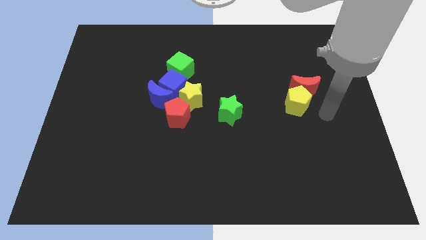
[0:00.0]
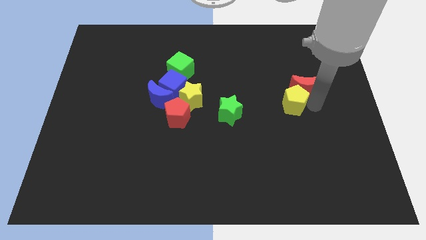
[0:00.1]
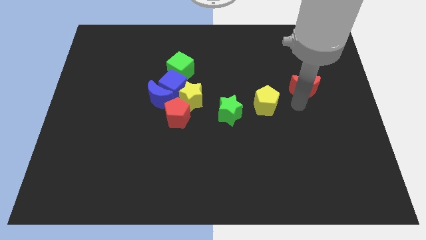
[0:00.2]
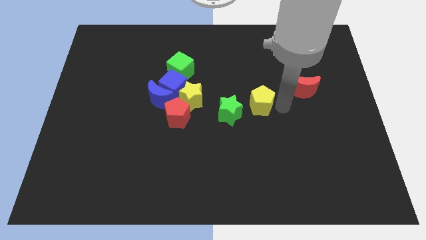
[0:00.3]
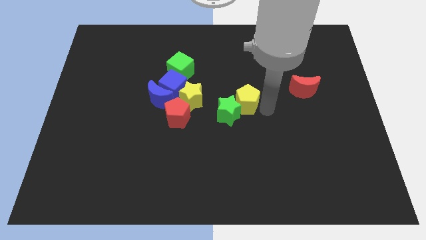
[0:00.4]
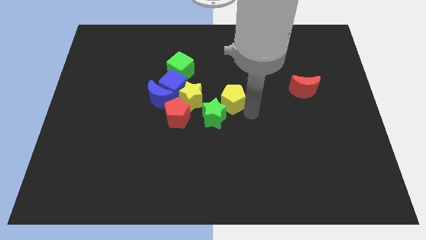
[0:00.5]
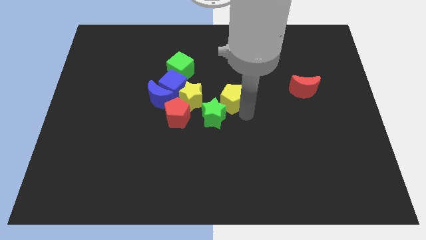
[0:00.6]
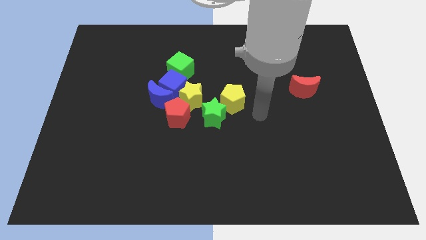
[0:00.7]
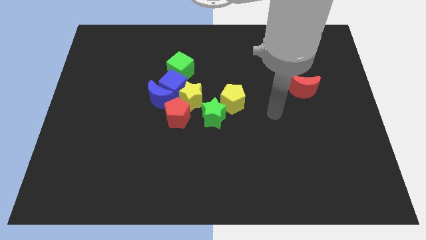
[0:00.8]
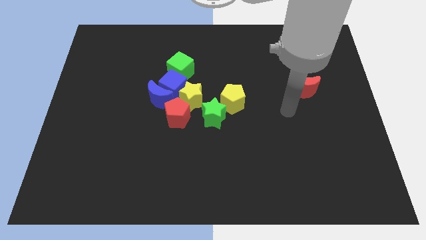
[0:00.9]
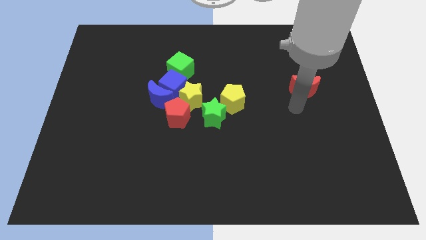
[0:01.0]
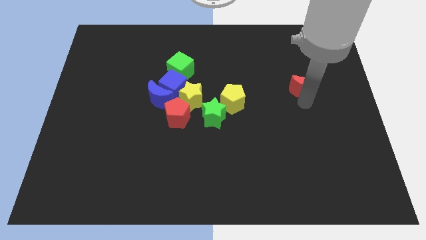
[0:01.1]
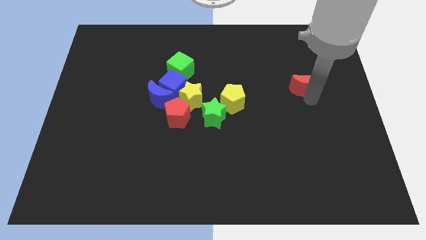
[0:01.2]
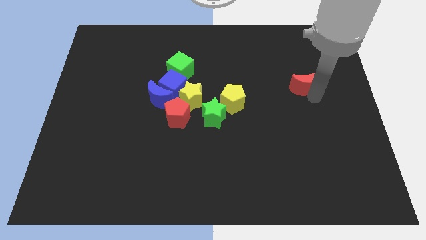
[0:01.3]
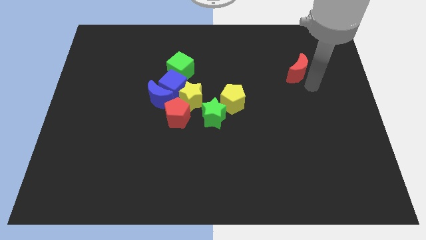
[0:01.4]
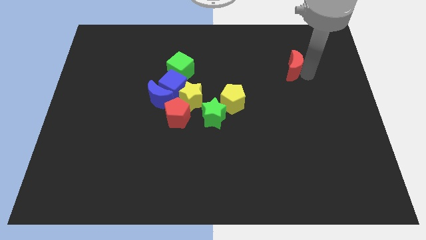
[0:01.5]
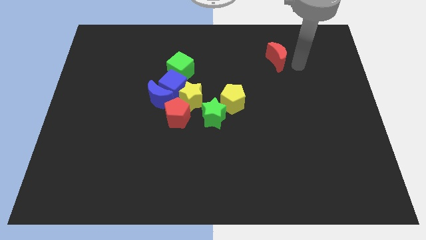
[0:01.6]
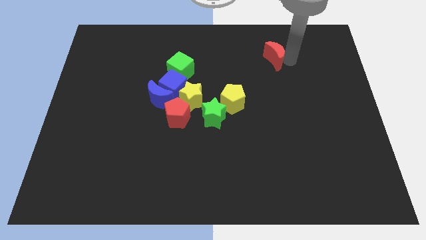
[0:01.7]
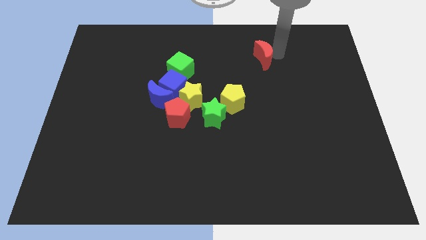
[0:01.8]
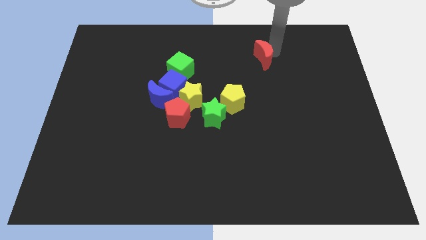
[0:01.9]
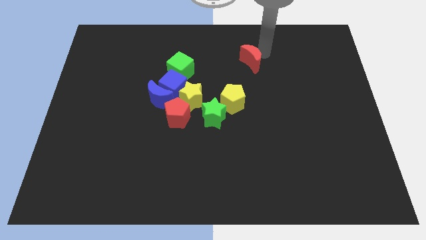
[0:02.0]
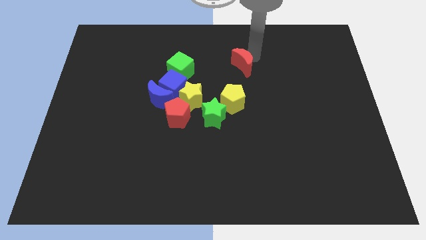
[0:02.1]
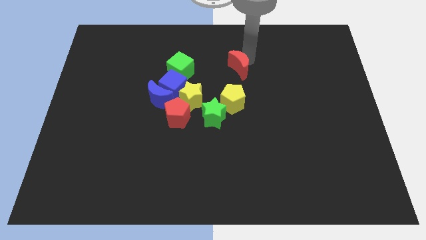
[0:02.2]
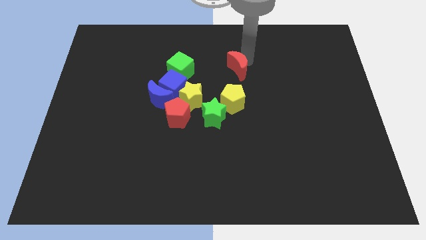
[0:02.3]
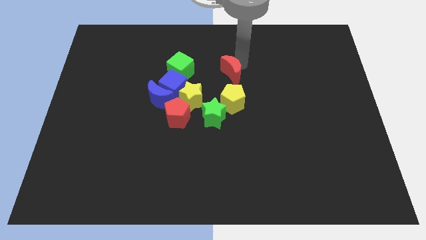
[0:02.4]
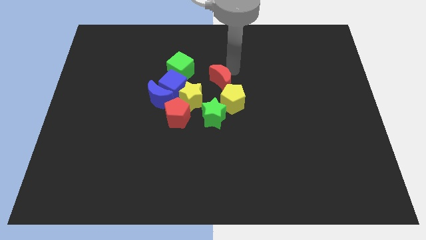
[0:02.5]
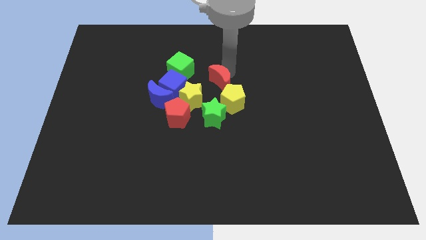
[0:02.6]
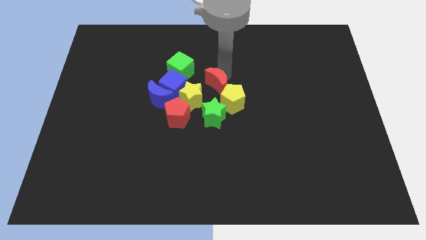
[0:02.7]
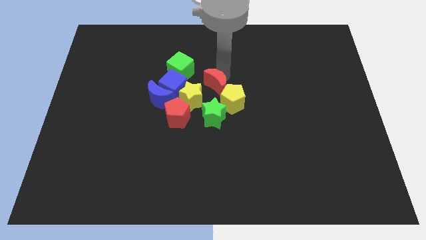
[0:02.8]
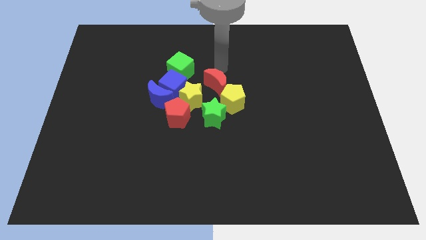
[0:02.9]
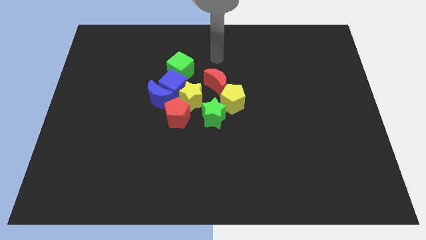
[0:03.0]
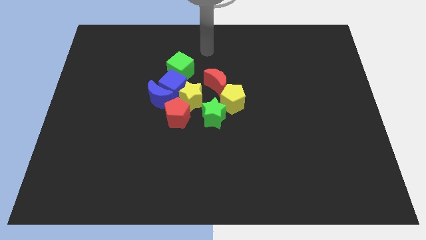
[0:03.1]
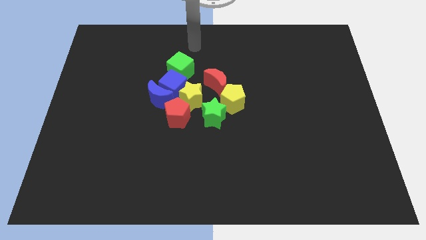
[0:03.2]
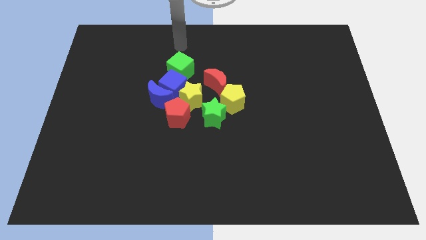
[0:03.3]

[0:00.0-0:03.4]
put the yellow pentagon and red moon to the group of blocks

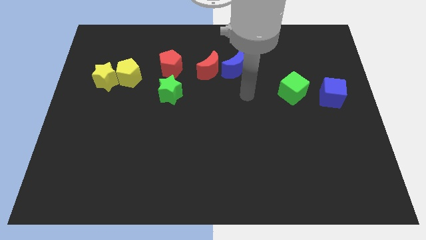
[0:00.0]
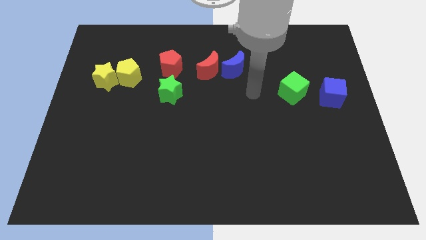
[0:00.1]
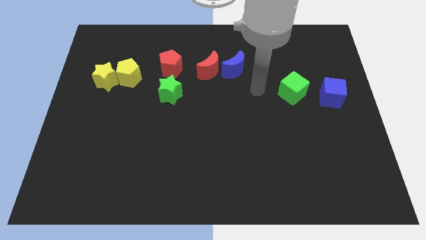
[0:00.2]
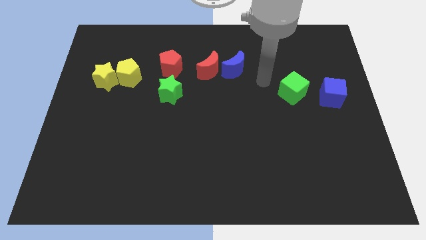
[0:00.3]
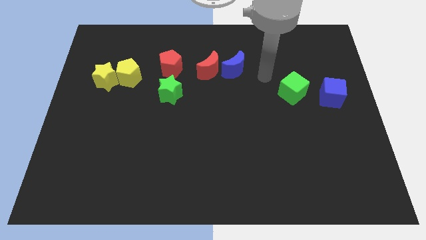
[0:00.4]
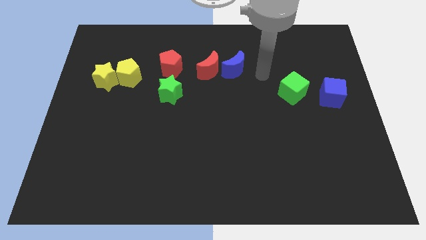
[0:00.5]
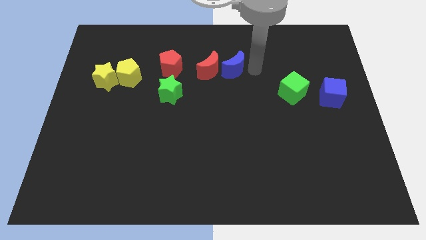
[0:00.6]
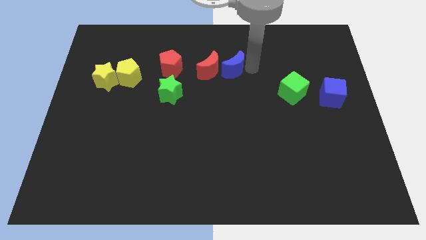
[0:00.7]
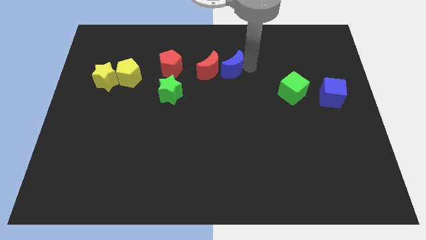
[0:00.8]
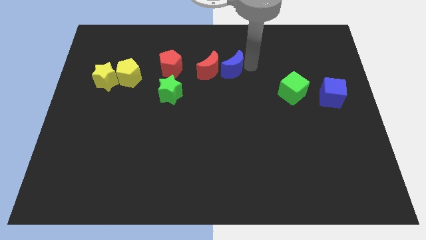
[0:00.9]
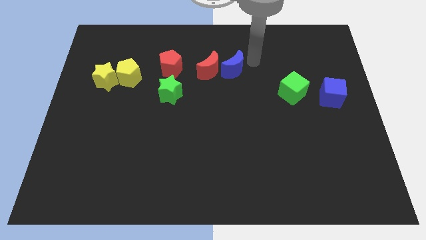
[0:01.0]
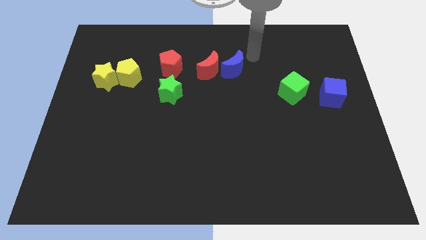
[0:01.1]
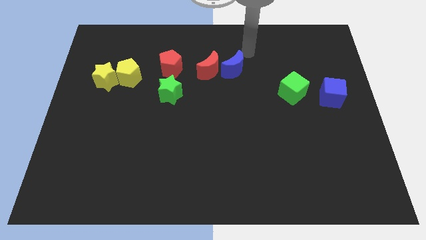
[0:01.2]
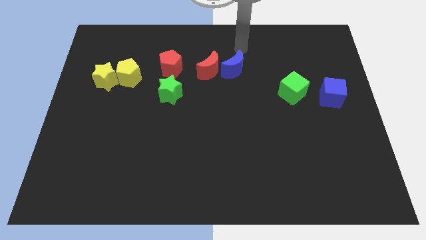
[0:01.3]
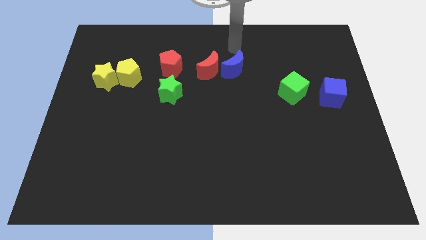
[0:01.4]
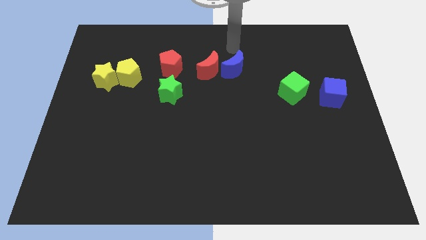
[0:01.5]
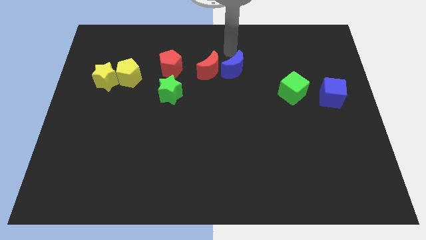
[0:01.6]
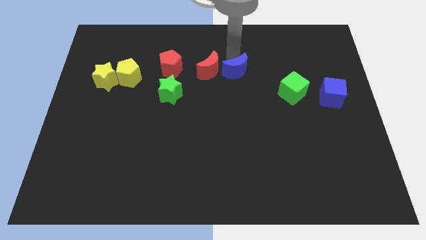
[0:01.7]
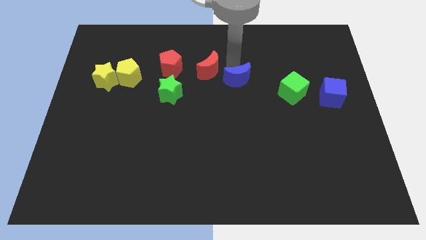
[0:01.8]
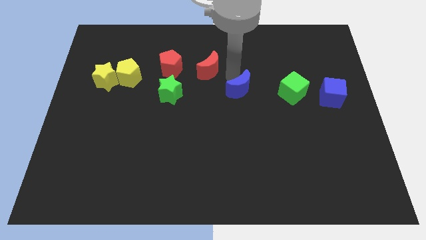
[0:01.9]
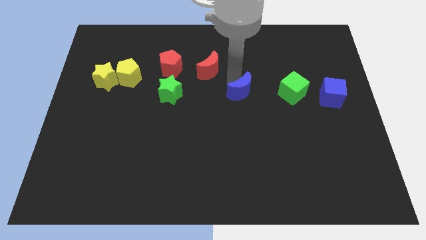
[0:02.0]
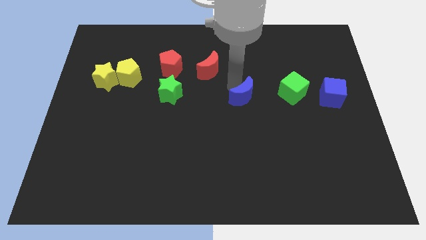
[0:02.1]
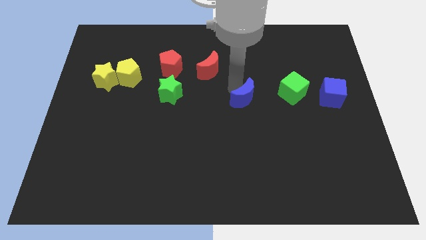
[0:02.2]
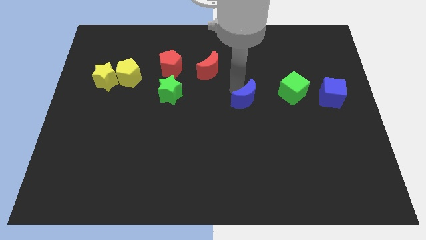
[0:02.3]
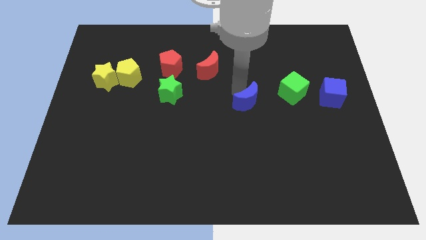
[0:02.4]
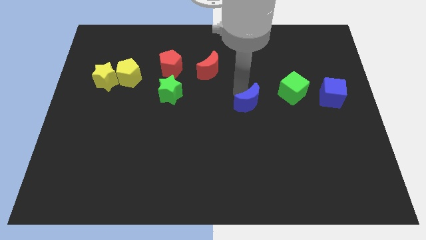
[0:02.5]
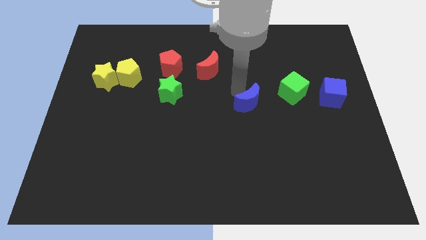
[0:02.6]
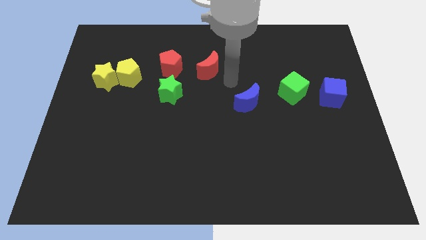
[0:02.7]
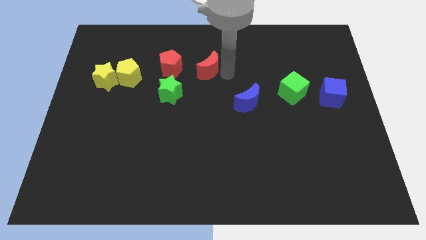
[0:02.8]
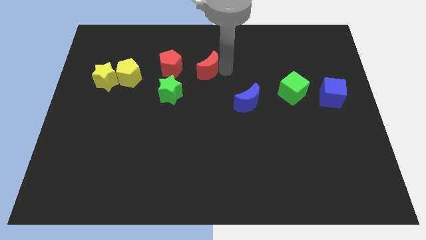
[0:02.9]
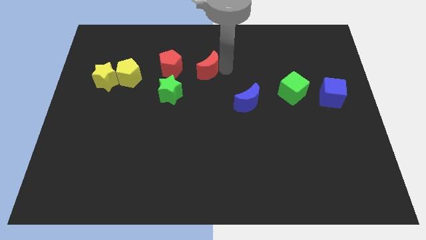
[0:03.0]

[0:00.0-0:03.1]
push the blue crescent towards the bottom of the board

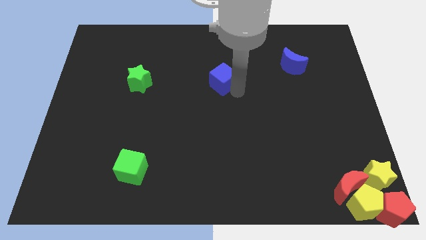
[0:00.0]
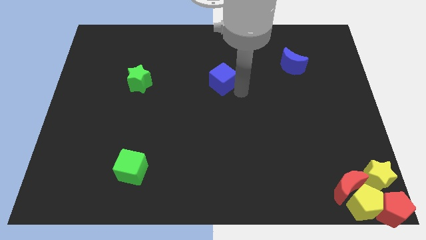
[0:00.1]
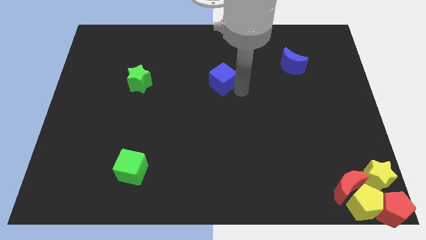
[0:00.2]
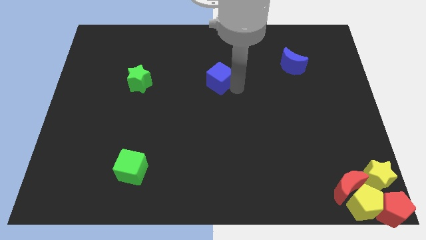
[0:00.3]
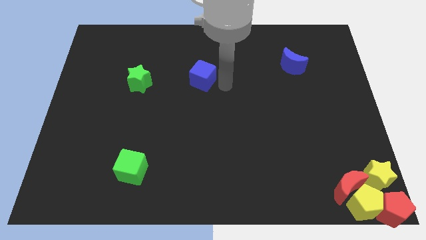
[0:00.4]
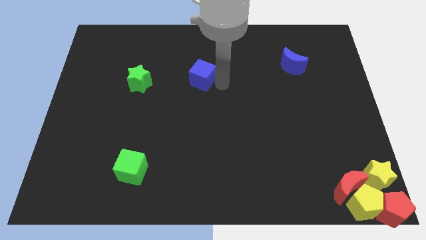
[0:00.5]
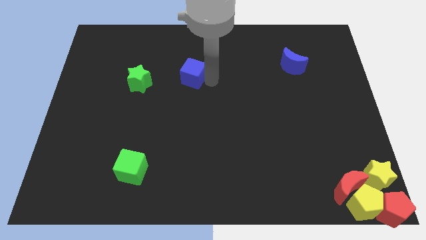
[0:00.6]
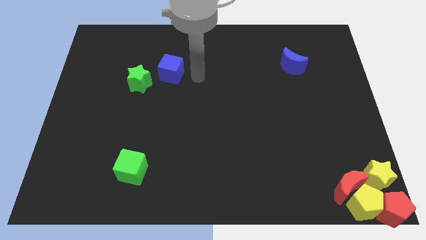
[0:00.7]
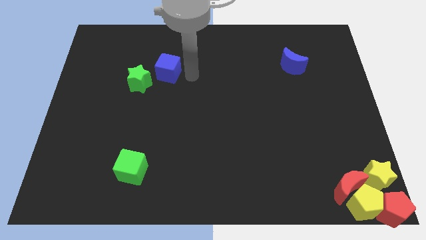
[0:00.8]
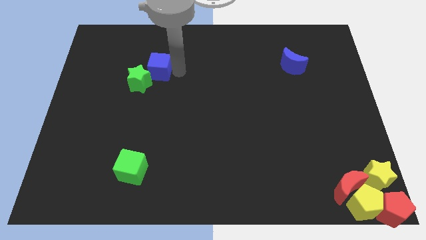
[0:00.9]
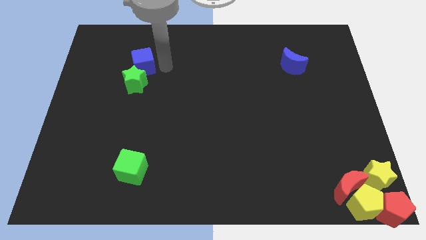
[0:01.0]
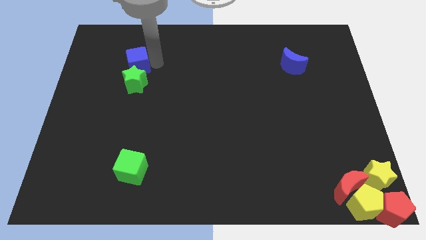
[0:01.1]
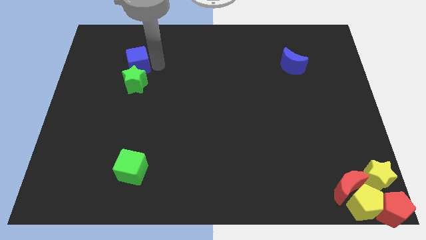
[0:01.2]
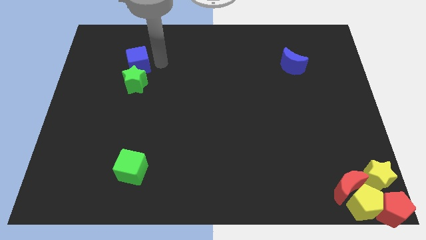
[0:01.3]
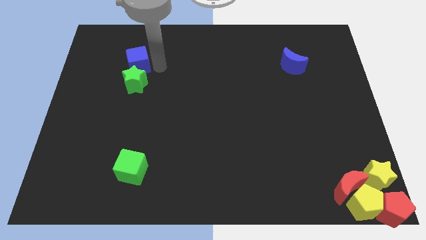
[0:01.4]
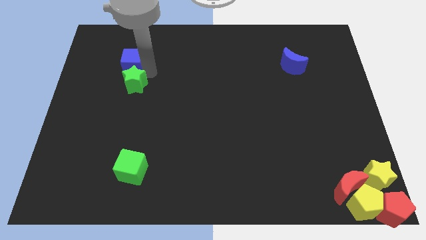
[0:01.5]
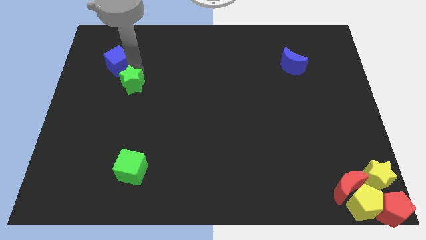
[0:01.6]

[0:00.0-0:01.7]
place the blue cube above the green star

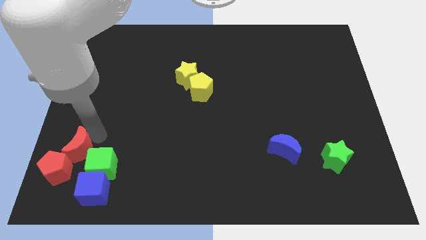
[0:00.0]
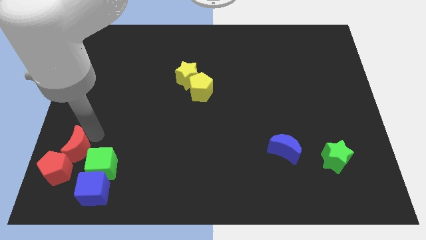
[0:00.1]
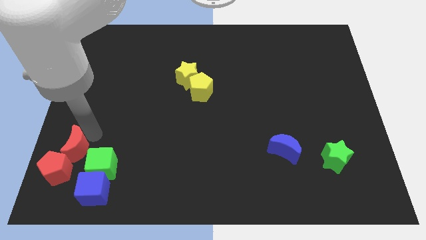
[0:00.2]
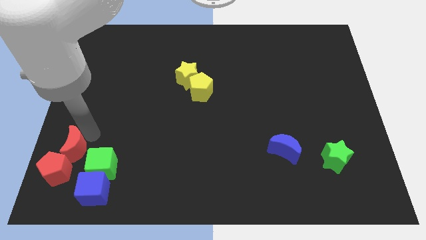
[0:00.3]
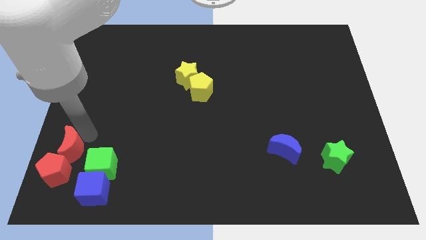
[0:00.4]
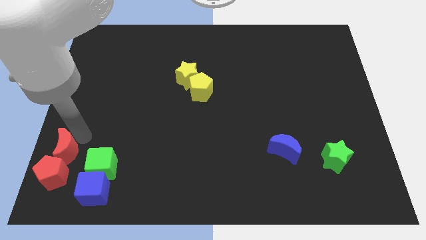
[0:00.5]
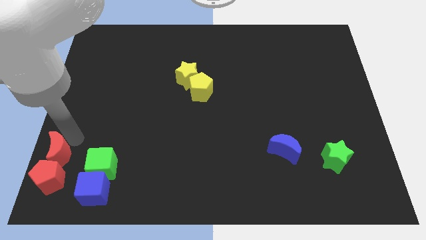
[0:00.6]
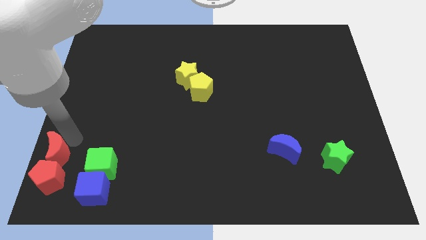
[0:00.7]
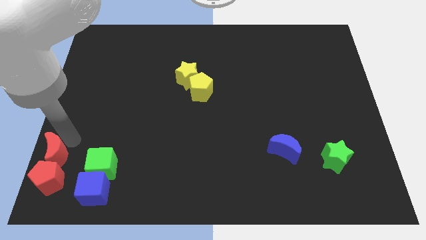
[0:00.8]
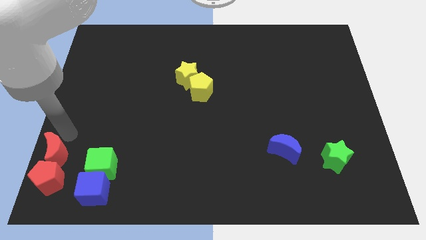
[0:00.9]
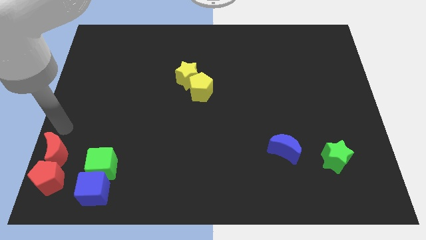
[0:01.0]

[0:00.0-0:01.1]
separate red blocks from green cube
